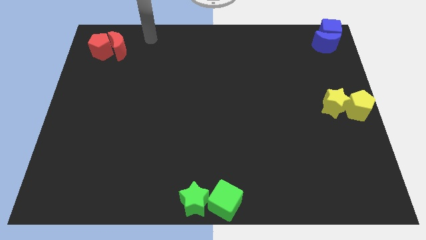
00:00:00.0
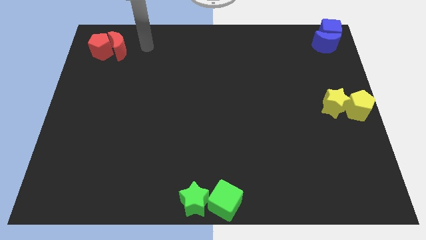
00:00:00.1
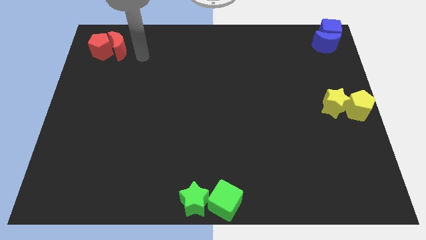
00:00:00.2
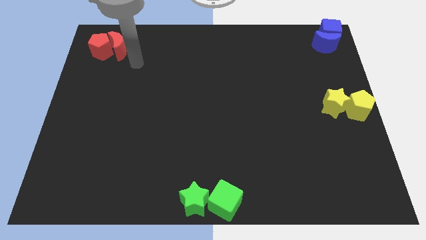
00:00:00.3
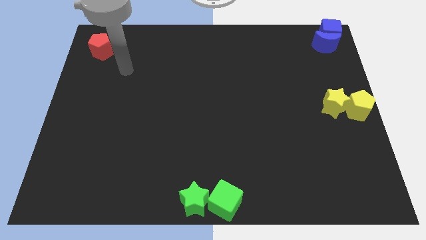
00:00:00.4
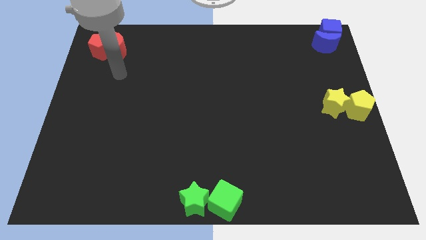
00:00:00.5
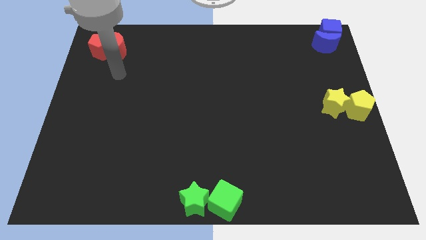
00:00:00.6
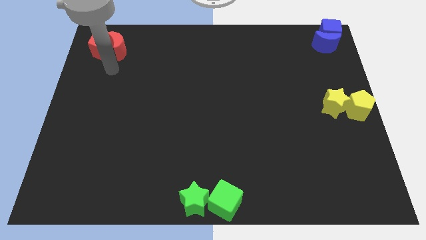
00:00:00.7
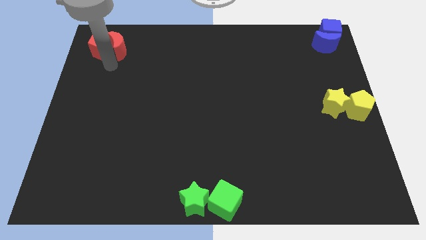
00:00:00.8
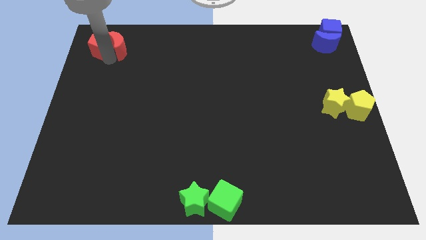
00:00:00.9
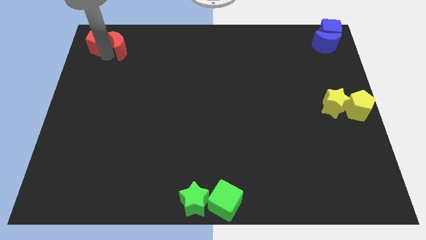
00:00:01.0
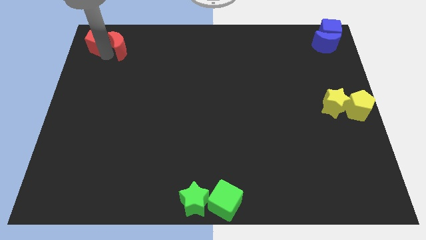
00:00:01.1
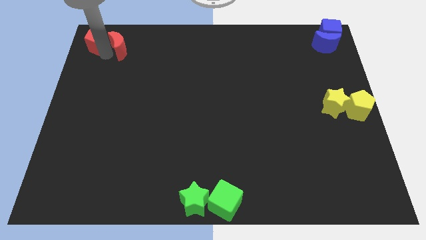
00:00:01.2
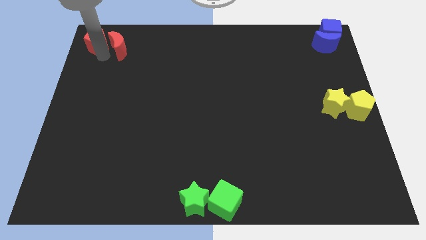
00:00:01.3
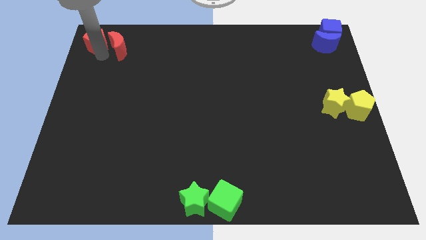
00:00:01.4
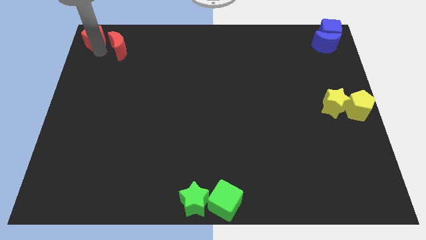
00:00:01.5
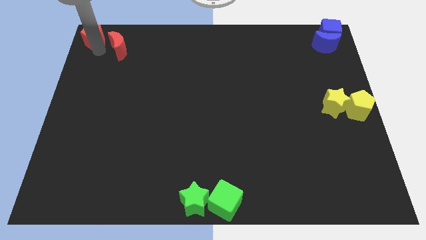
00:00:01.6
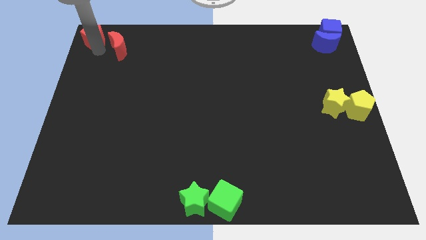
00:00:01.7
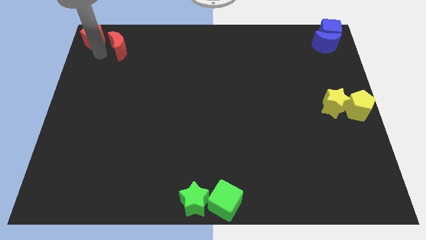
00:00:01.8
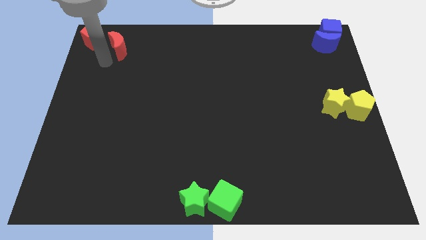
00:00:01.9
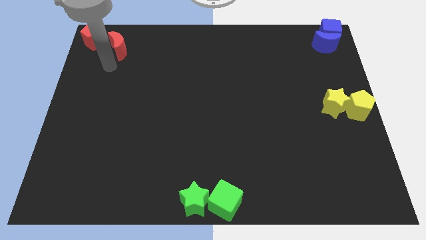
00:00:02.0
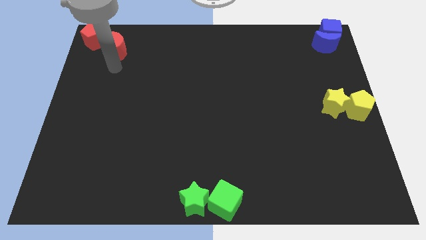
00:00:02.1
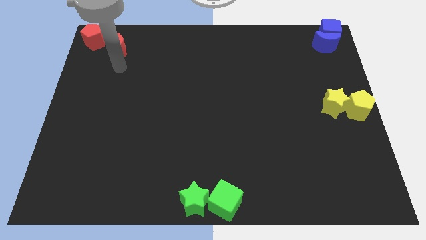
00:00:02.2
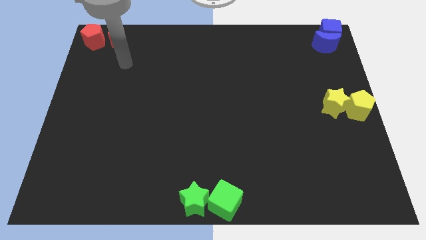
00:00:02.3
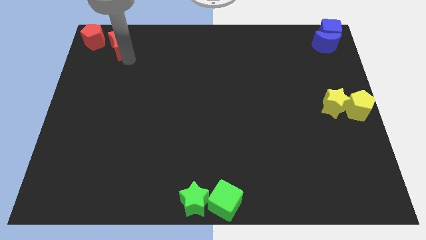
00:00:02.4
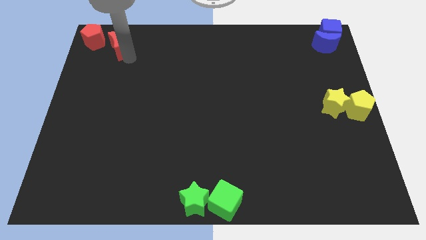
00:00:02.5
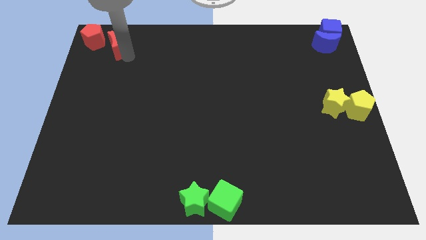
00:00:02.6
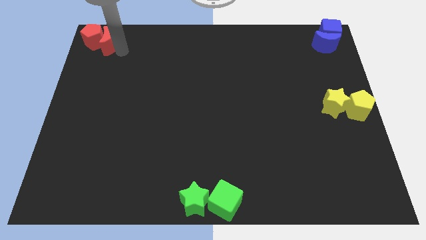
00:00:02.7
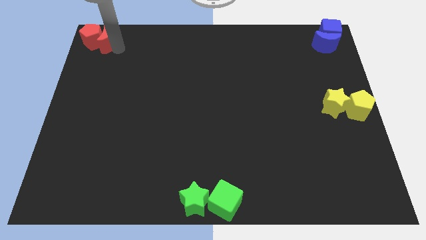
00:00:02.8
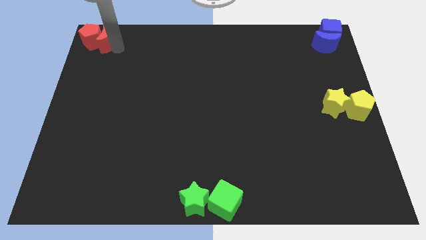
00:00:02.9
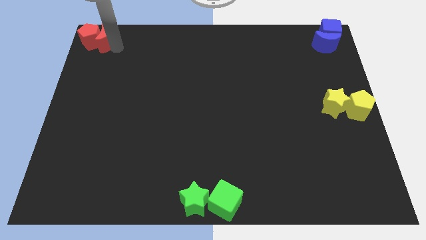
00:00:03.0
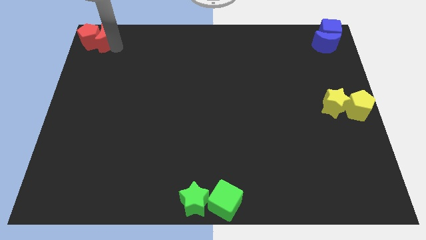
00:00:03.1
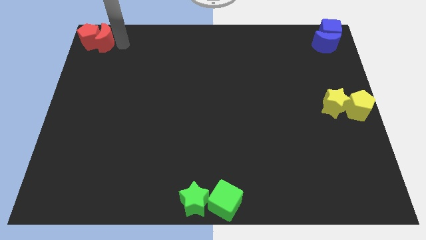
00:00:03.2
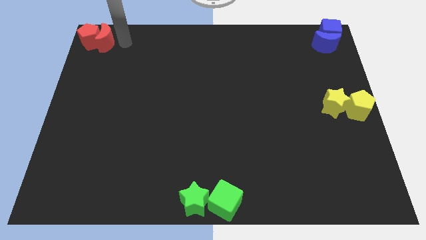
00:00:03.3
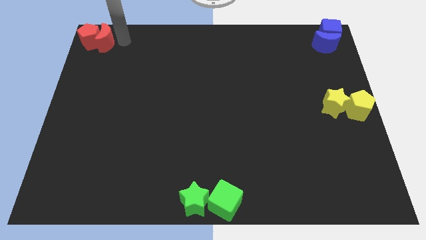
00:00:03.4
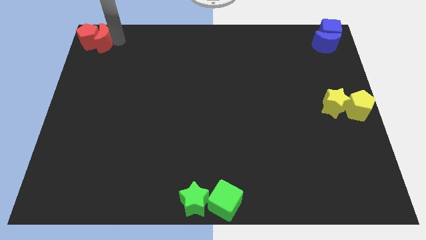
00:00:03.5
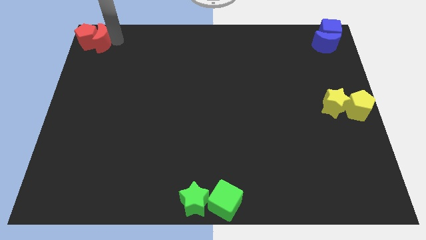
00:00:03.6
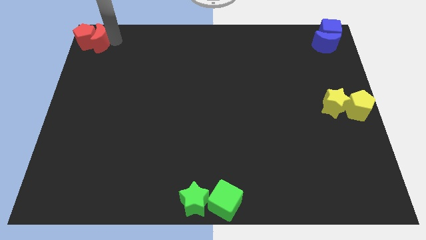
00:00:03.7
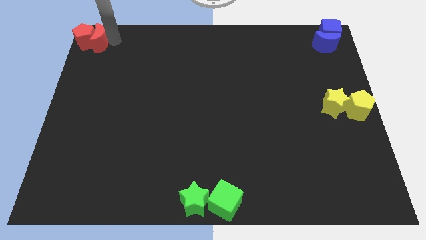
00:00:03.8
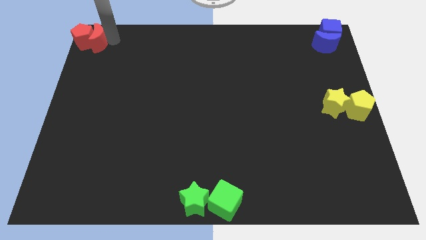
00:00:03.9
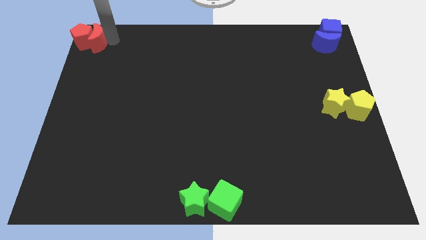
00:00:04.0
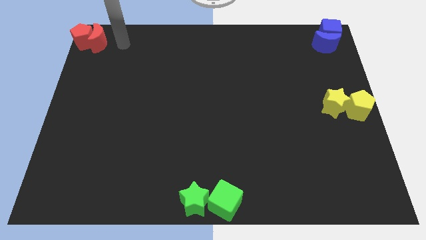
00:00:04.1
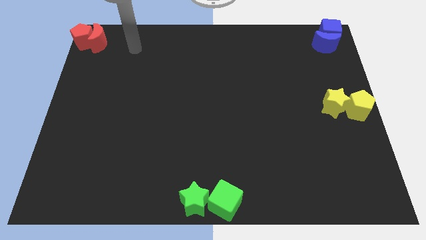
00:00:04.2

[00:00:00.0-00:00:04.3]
push the red blocks together to the top left corner of the board

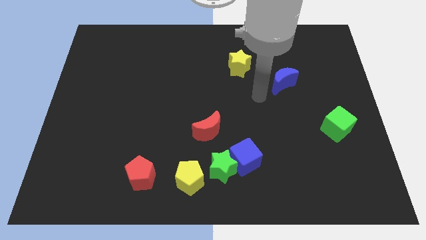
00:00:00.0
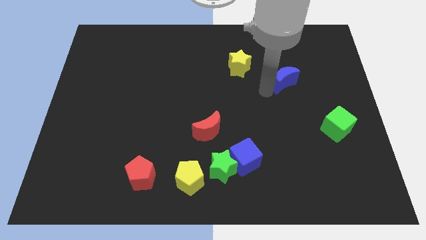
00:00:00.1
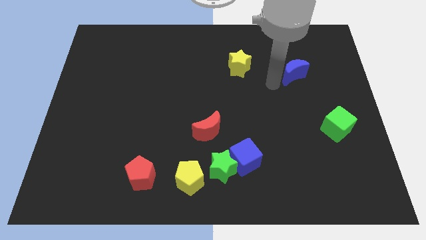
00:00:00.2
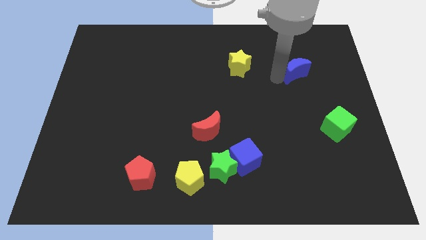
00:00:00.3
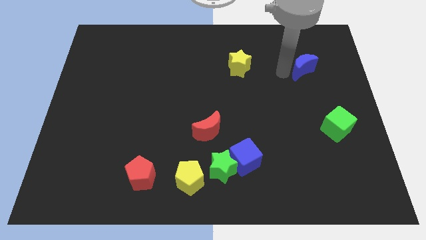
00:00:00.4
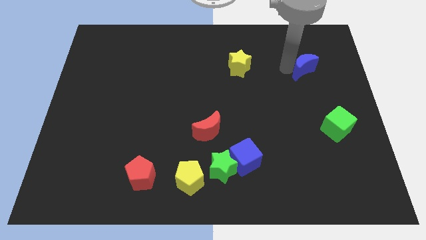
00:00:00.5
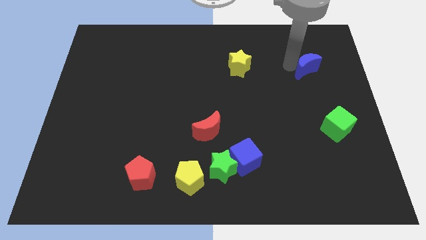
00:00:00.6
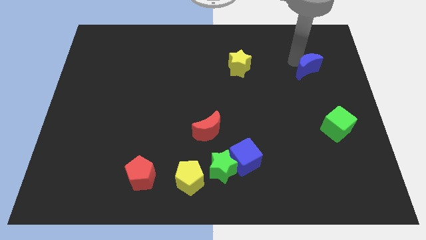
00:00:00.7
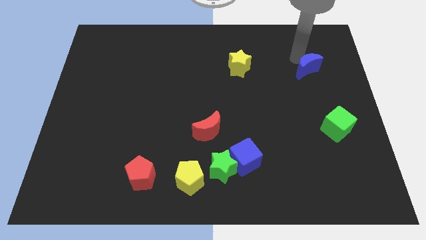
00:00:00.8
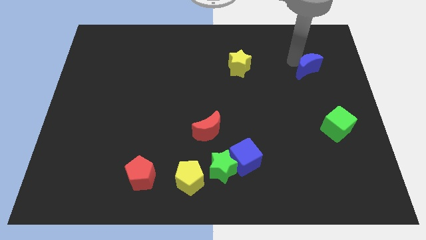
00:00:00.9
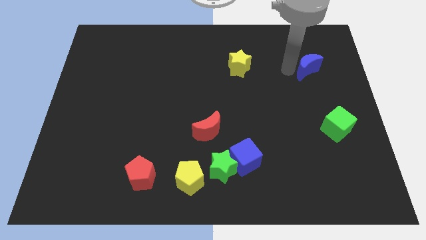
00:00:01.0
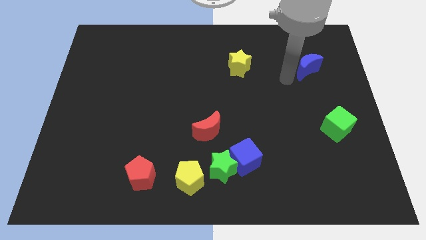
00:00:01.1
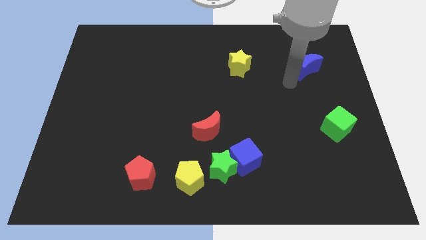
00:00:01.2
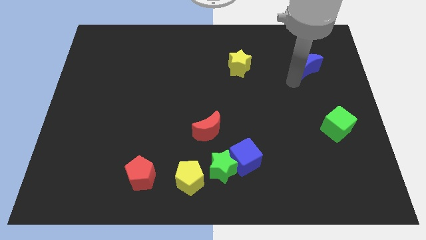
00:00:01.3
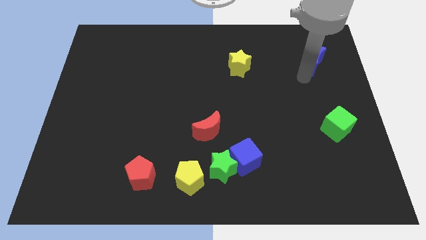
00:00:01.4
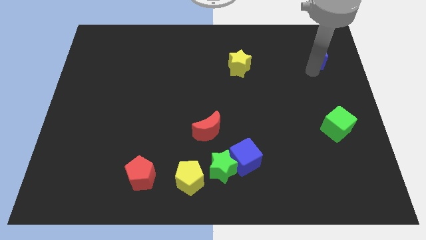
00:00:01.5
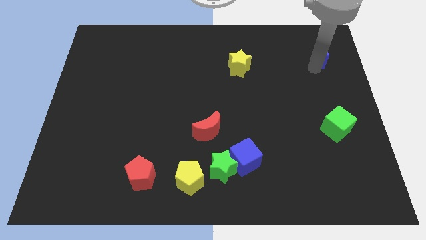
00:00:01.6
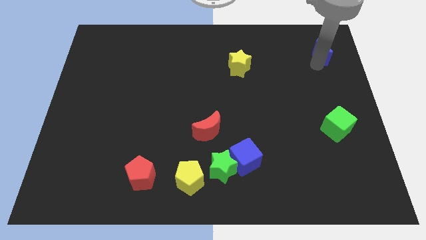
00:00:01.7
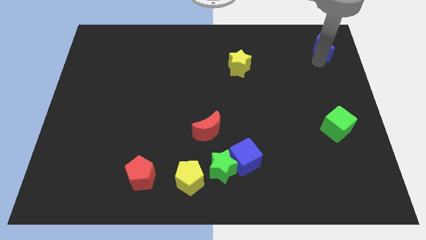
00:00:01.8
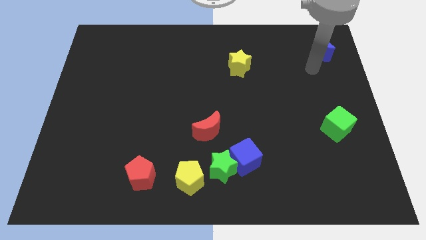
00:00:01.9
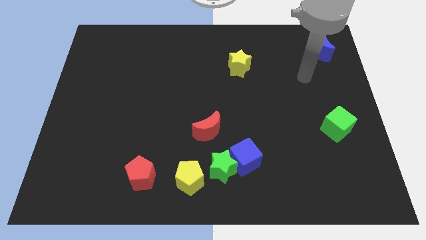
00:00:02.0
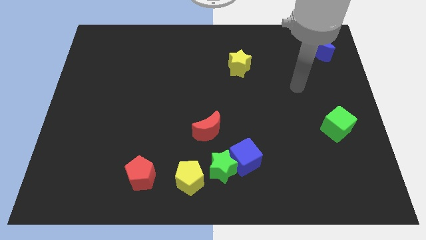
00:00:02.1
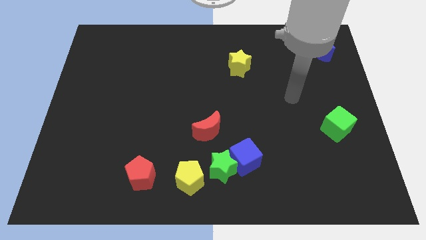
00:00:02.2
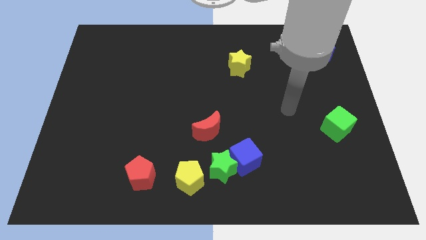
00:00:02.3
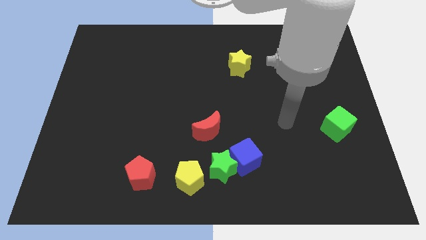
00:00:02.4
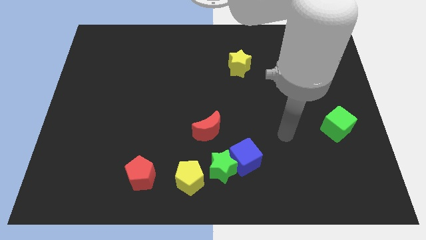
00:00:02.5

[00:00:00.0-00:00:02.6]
move the blue crescent towards the top right corner of the board

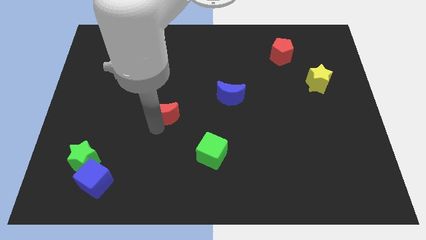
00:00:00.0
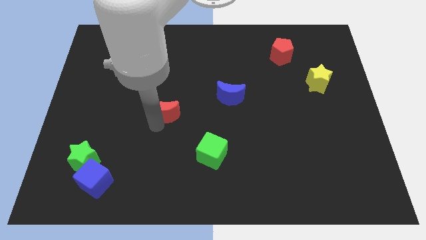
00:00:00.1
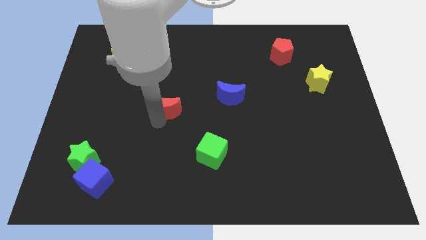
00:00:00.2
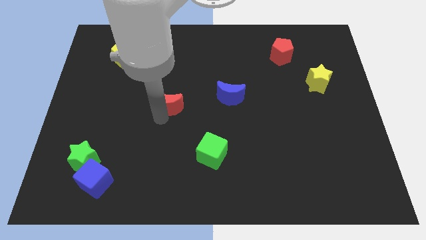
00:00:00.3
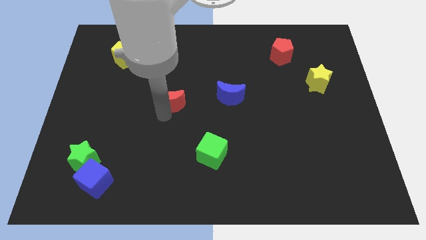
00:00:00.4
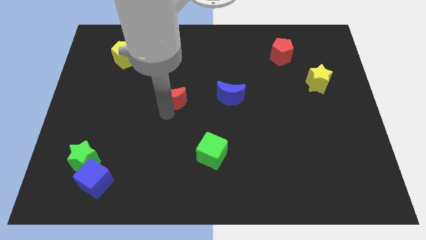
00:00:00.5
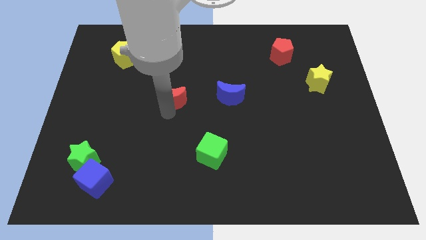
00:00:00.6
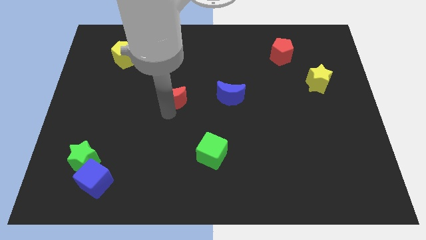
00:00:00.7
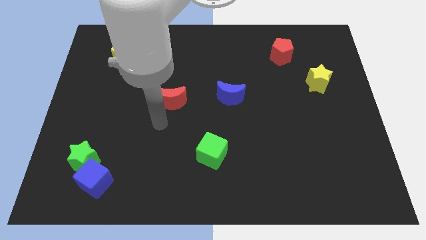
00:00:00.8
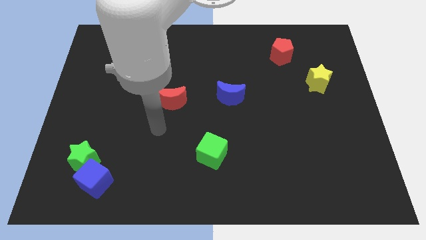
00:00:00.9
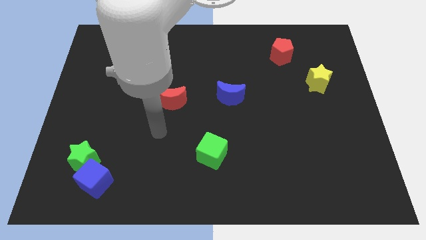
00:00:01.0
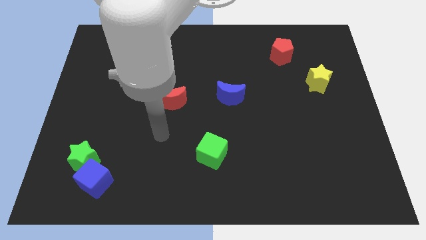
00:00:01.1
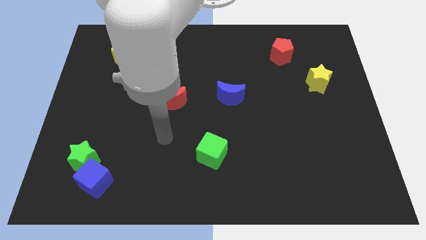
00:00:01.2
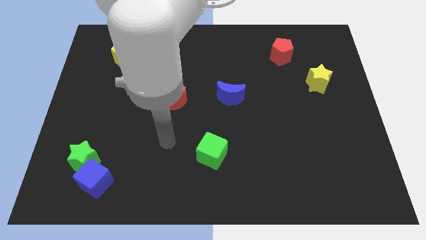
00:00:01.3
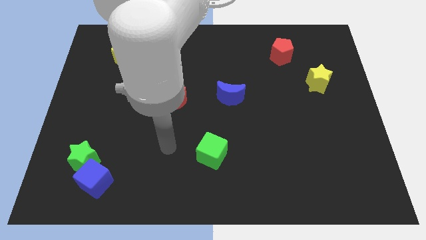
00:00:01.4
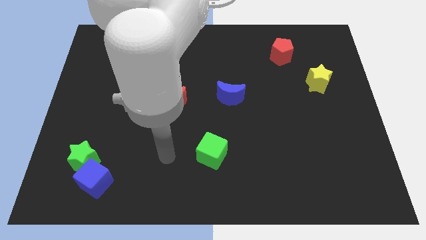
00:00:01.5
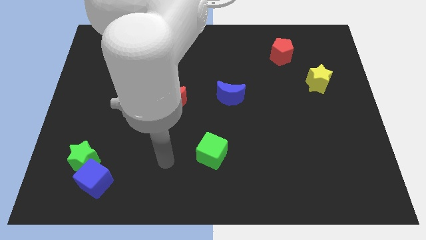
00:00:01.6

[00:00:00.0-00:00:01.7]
place the red moon to the left of blue moon

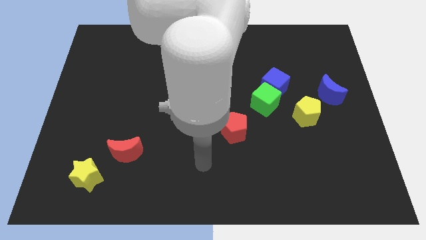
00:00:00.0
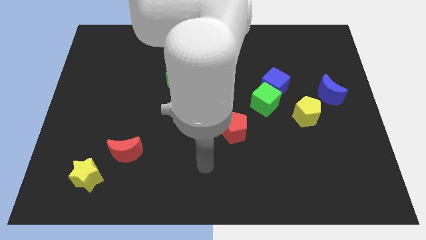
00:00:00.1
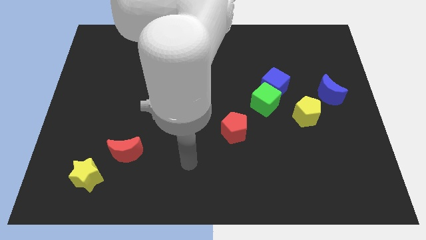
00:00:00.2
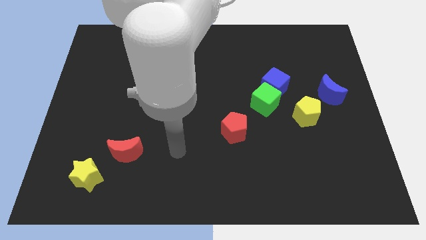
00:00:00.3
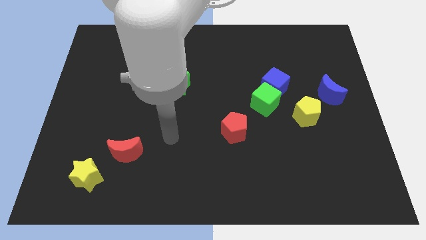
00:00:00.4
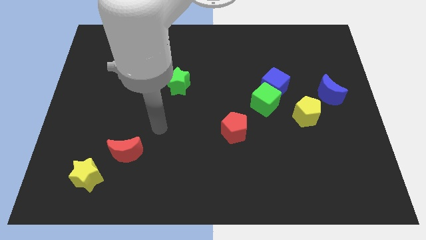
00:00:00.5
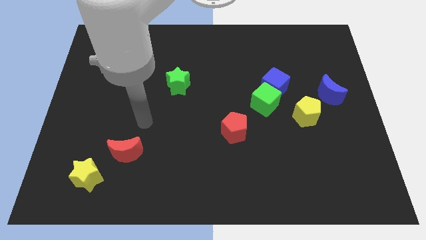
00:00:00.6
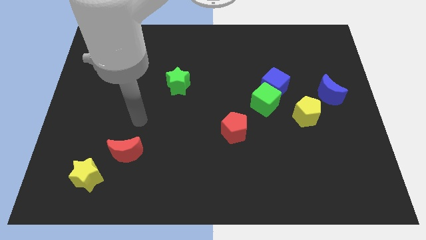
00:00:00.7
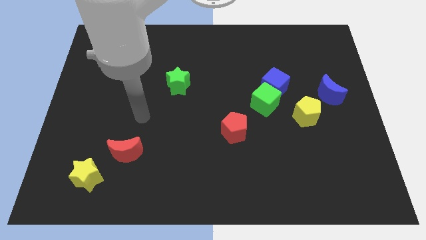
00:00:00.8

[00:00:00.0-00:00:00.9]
move hand in between red moon and green star
